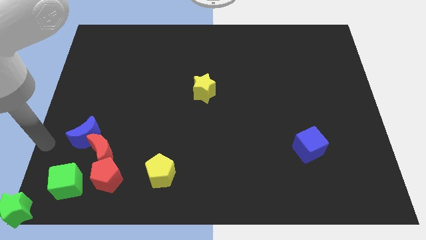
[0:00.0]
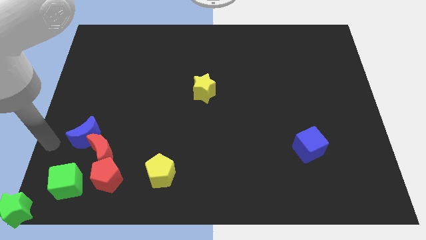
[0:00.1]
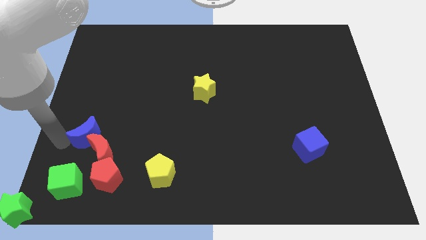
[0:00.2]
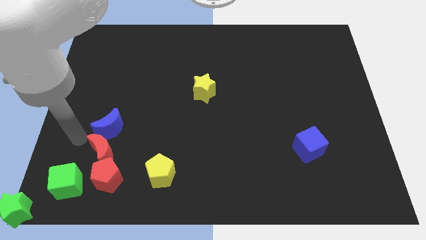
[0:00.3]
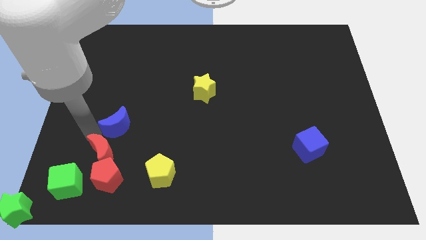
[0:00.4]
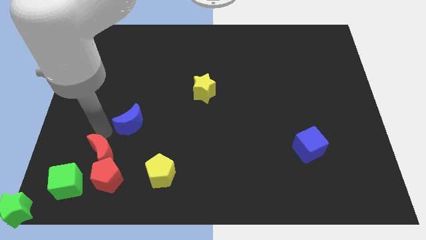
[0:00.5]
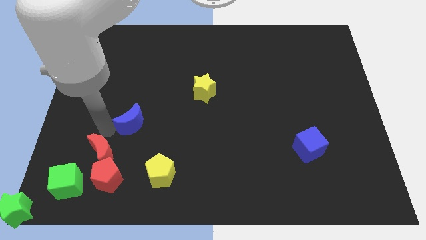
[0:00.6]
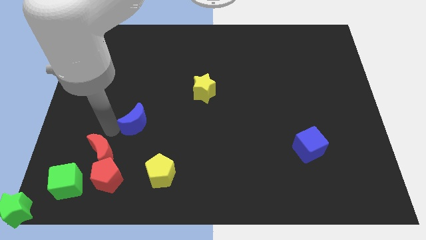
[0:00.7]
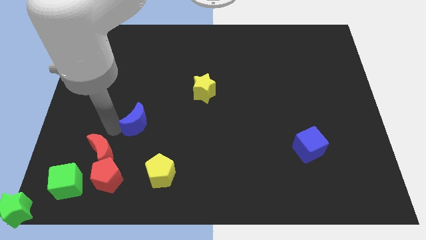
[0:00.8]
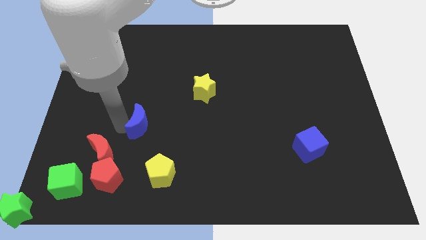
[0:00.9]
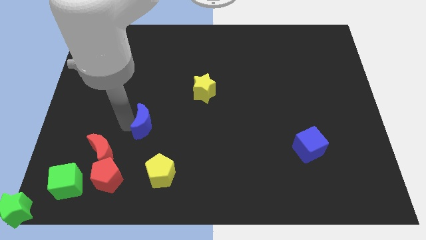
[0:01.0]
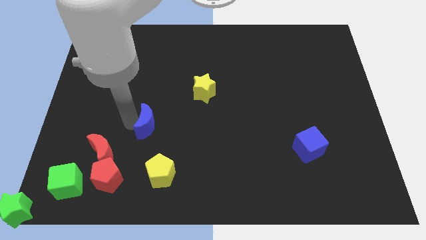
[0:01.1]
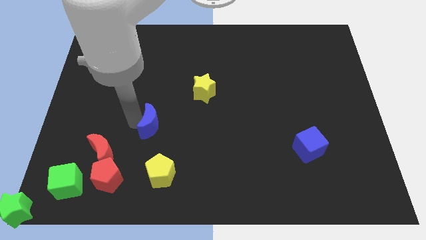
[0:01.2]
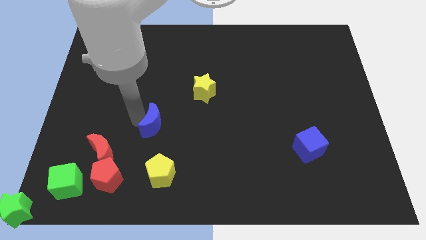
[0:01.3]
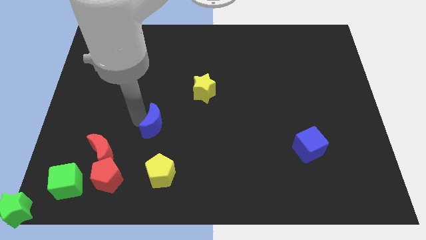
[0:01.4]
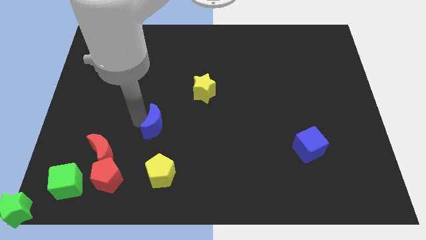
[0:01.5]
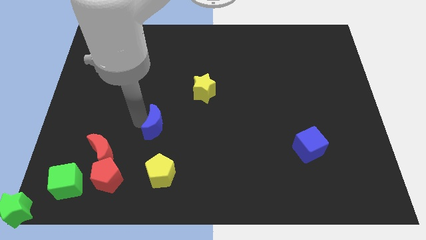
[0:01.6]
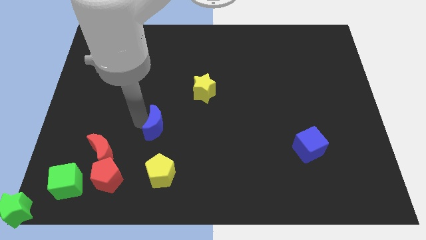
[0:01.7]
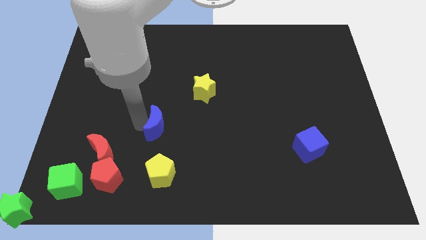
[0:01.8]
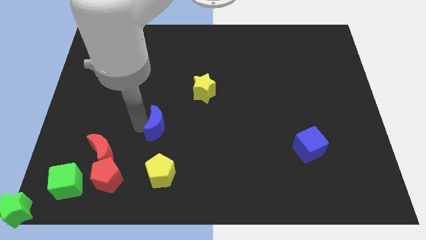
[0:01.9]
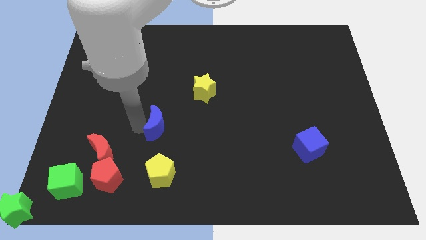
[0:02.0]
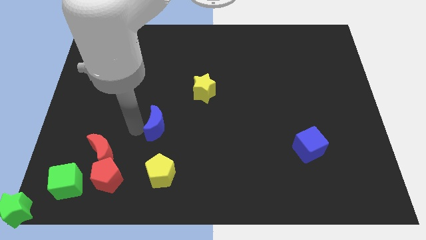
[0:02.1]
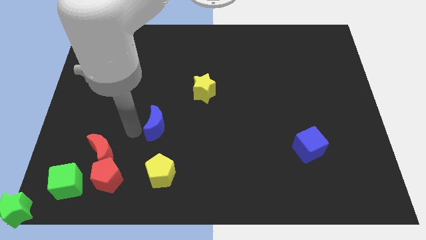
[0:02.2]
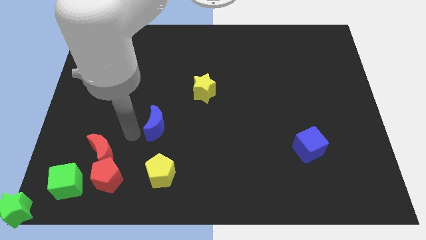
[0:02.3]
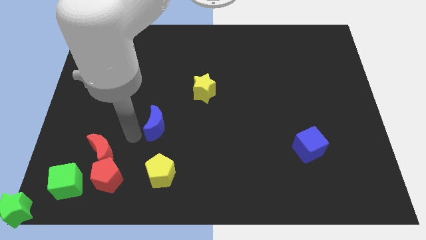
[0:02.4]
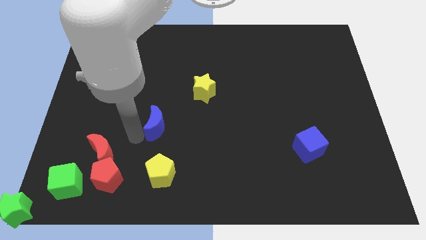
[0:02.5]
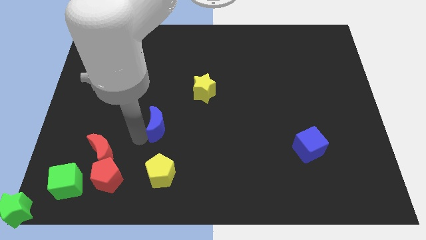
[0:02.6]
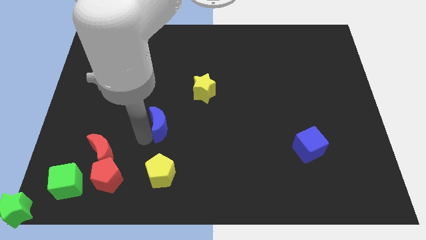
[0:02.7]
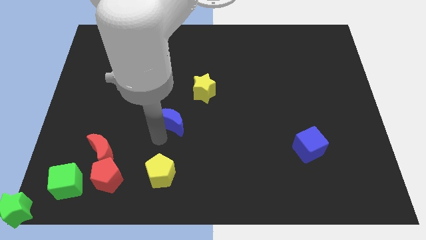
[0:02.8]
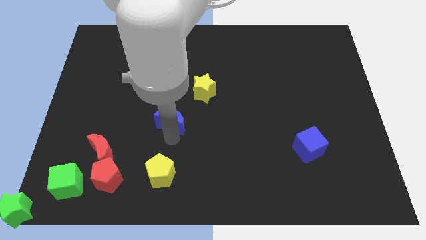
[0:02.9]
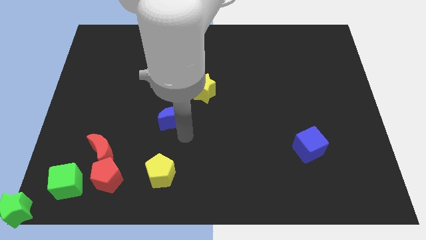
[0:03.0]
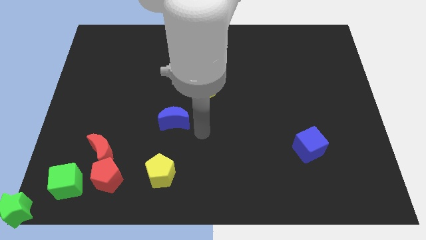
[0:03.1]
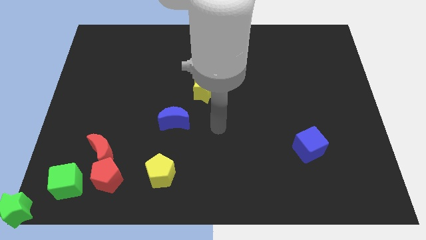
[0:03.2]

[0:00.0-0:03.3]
push the blue moon above the yellow pentagon

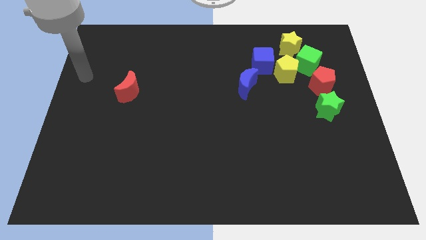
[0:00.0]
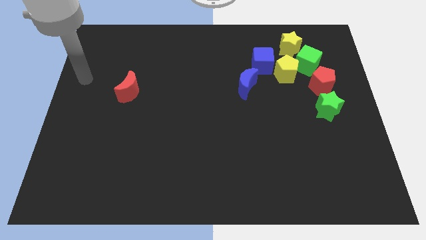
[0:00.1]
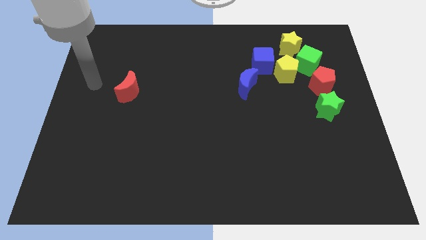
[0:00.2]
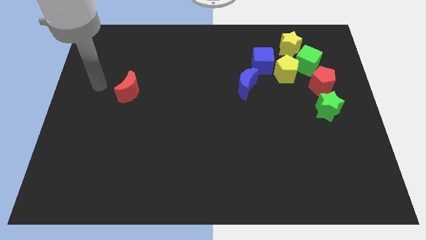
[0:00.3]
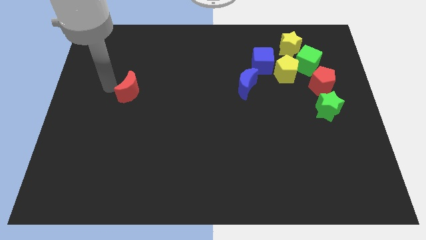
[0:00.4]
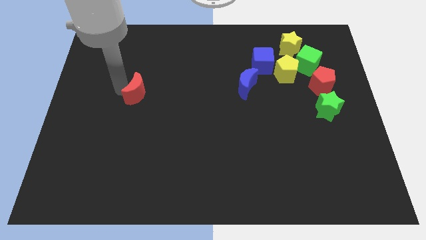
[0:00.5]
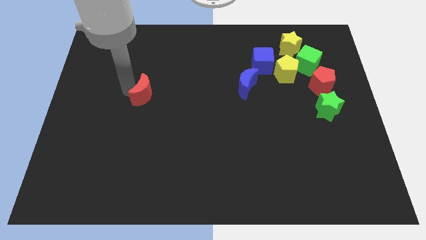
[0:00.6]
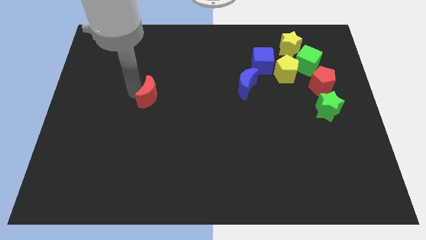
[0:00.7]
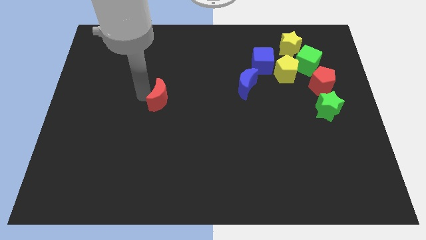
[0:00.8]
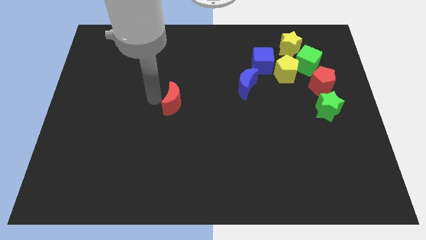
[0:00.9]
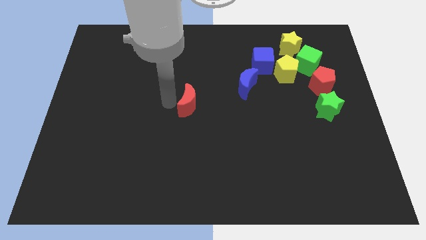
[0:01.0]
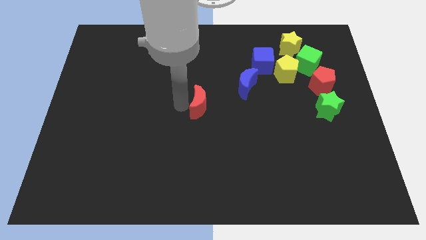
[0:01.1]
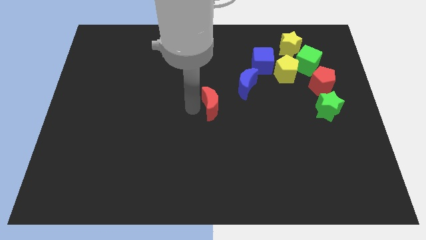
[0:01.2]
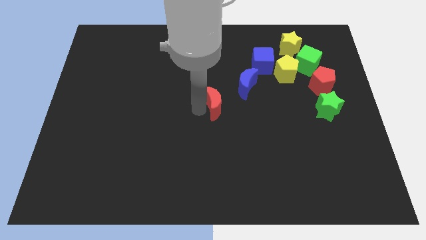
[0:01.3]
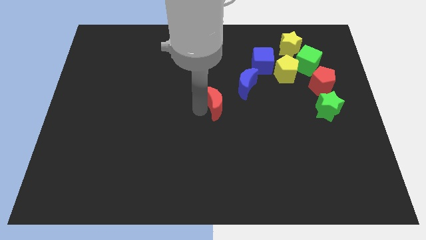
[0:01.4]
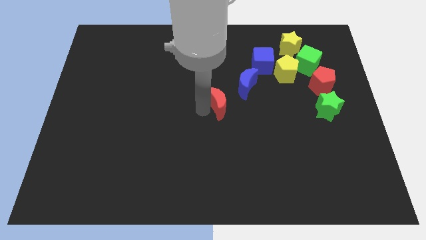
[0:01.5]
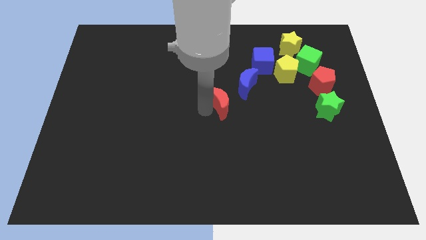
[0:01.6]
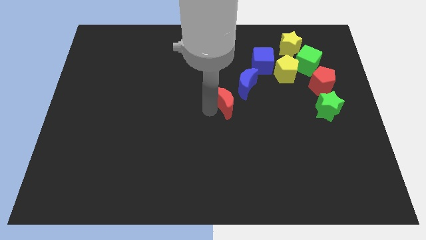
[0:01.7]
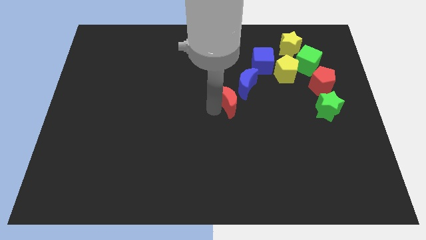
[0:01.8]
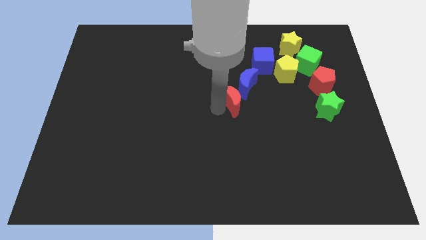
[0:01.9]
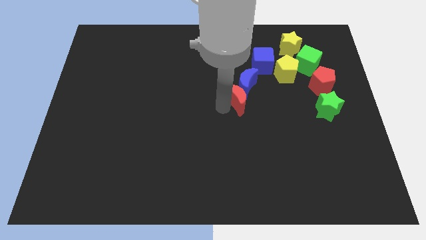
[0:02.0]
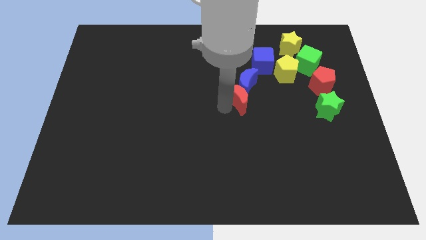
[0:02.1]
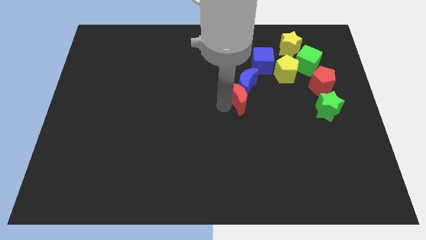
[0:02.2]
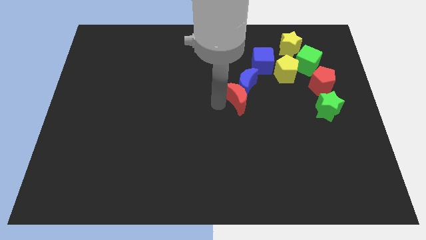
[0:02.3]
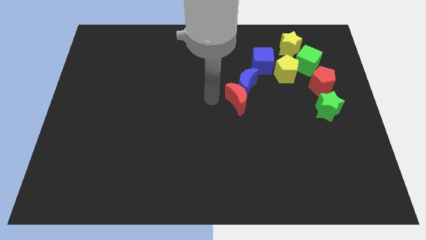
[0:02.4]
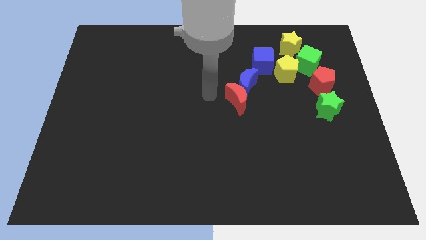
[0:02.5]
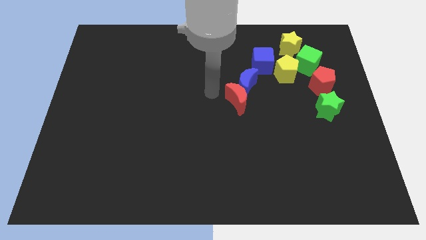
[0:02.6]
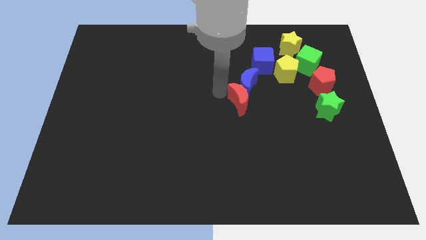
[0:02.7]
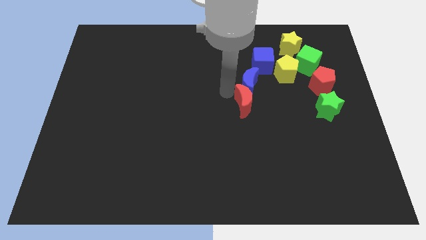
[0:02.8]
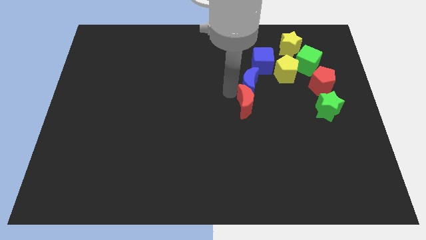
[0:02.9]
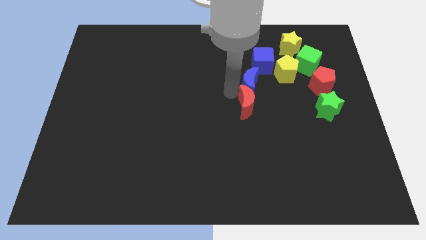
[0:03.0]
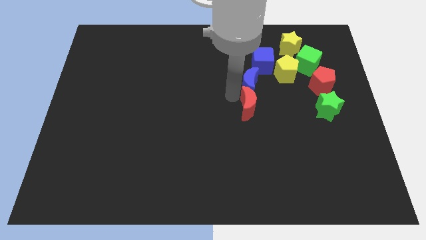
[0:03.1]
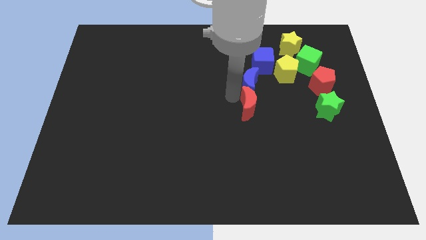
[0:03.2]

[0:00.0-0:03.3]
push the red moon at the bottom of the blue moon

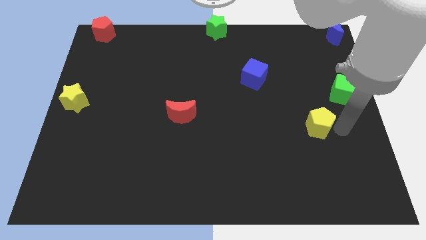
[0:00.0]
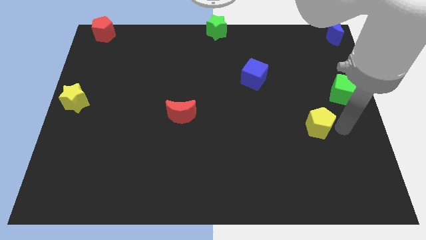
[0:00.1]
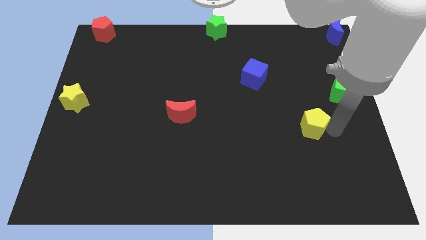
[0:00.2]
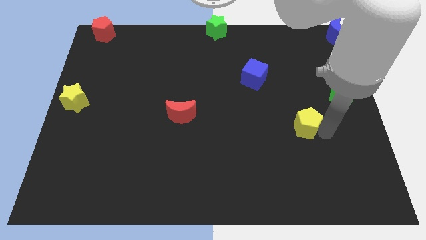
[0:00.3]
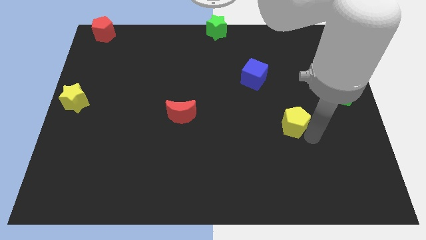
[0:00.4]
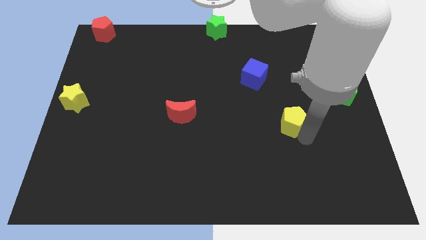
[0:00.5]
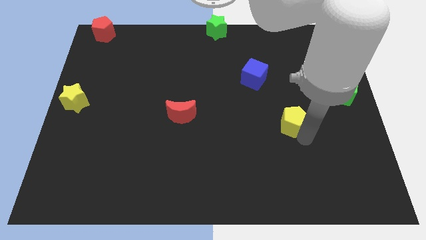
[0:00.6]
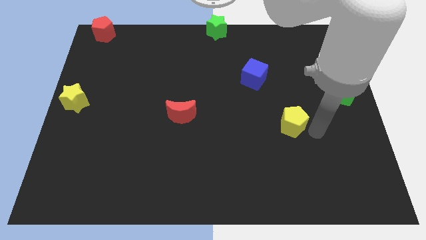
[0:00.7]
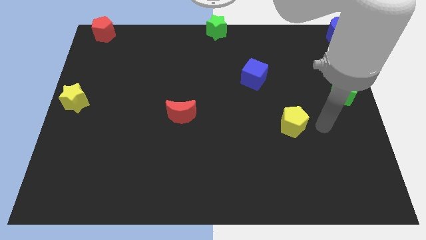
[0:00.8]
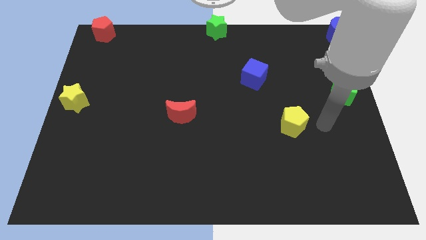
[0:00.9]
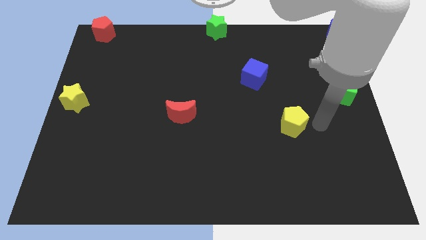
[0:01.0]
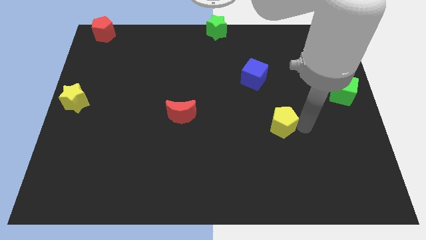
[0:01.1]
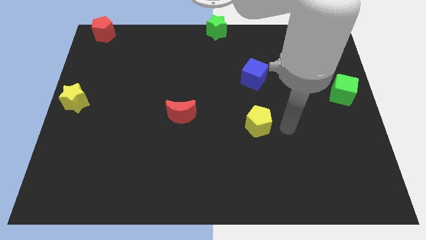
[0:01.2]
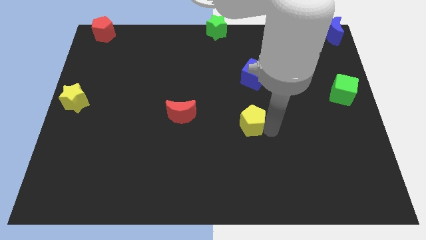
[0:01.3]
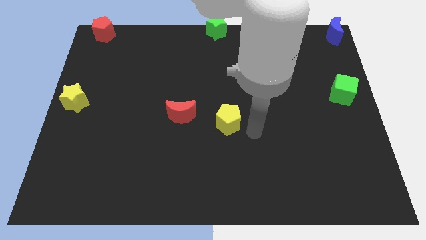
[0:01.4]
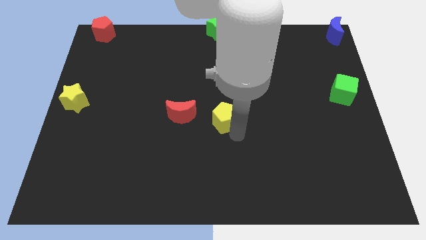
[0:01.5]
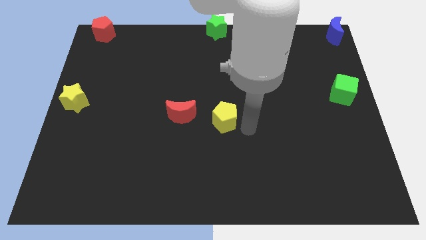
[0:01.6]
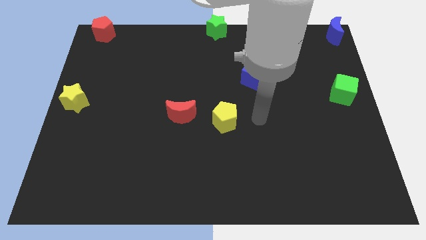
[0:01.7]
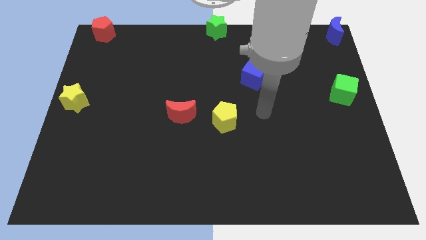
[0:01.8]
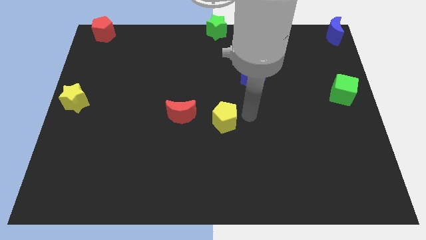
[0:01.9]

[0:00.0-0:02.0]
move the yellow pentagon towards the center of the board

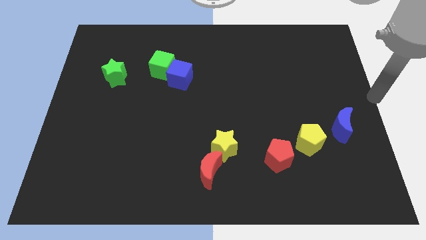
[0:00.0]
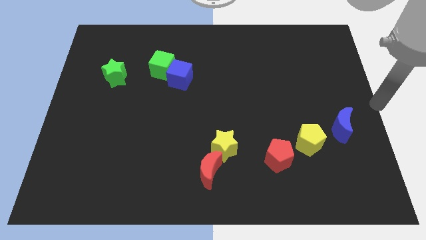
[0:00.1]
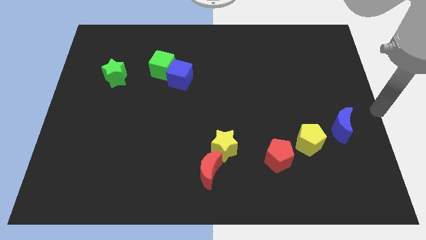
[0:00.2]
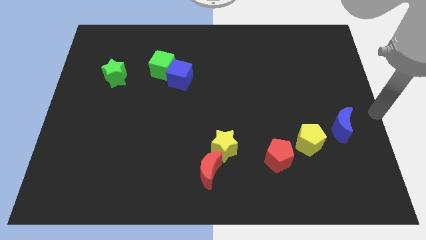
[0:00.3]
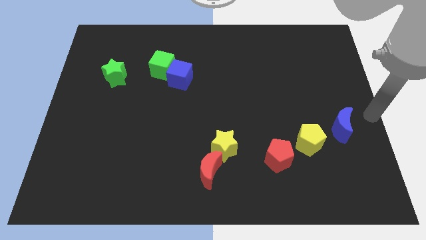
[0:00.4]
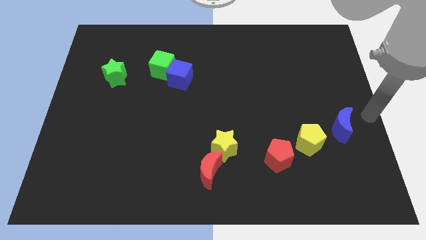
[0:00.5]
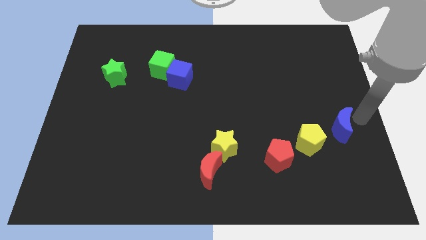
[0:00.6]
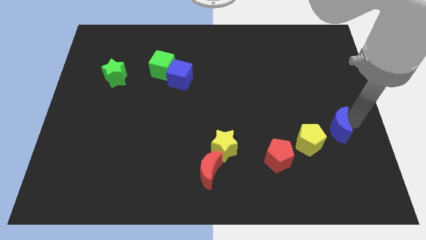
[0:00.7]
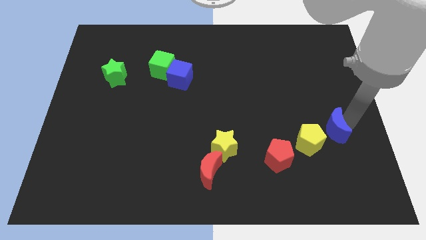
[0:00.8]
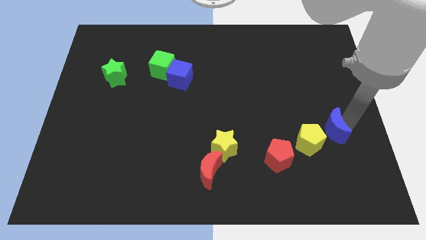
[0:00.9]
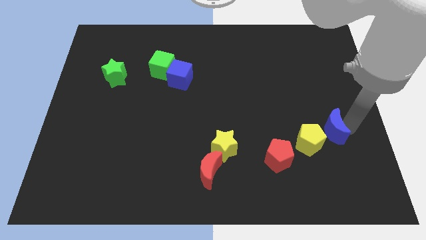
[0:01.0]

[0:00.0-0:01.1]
tap your hand on the bottom right of blue moon
